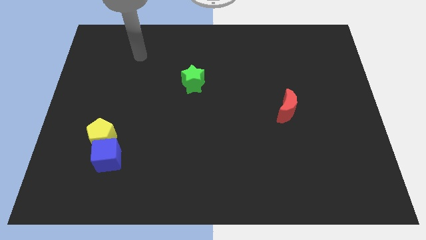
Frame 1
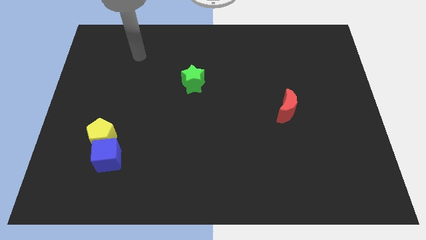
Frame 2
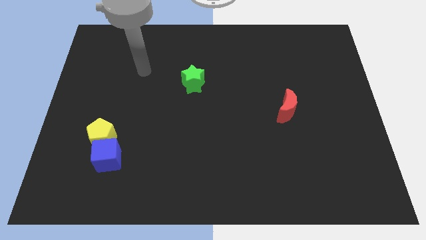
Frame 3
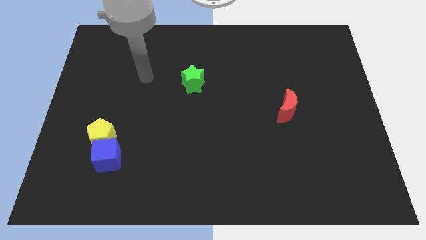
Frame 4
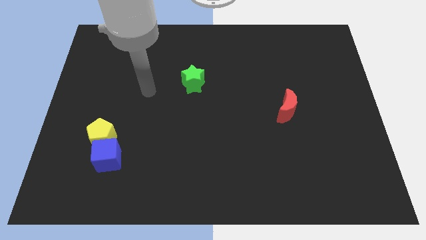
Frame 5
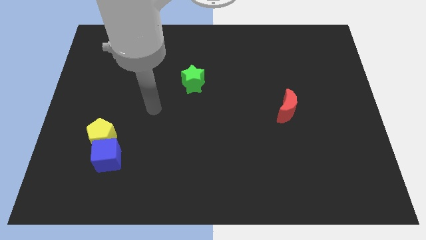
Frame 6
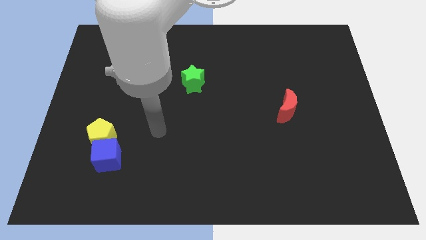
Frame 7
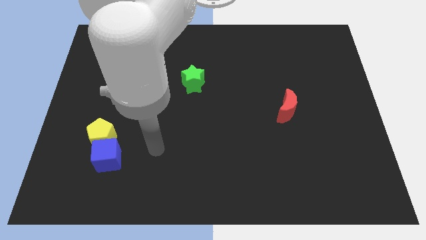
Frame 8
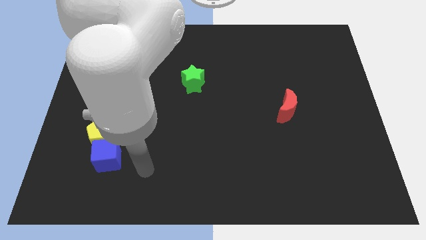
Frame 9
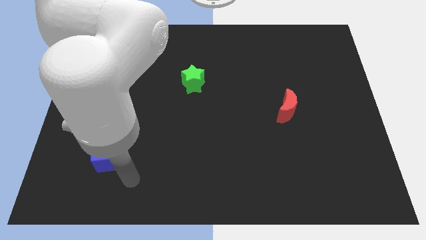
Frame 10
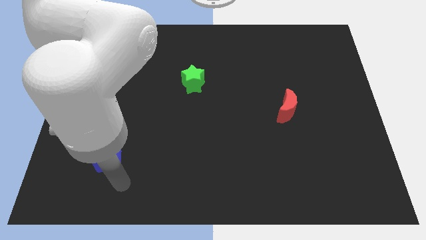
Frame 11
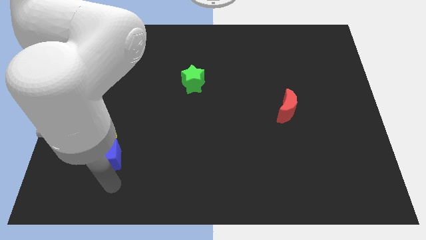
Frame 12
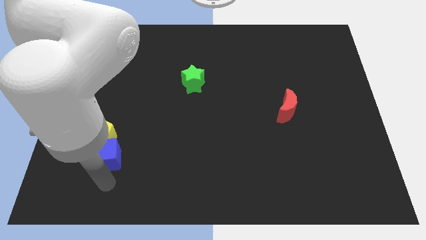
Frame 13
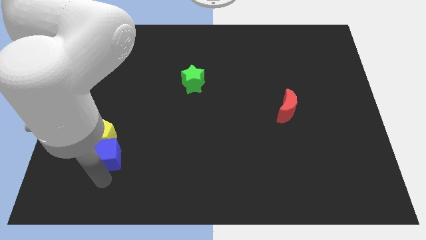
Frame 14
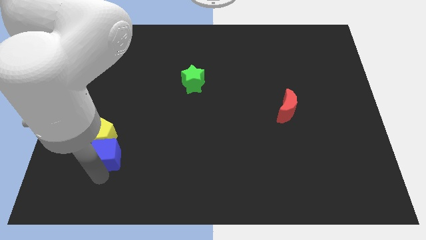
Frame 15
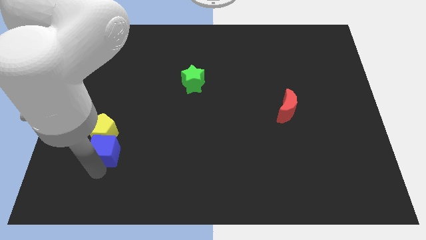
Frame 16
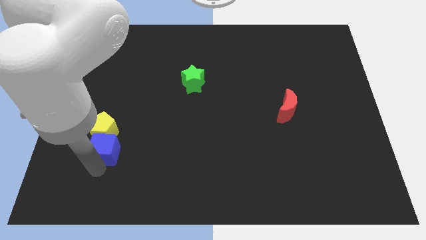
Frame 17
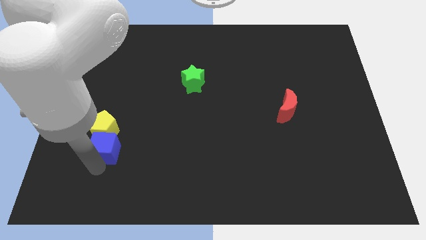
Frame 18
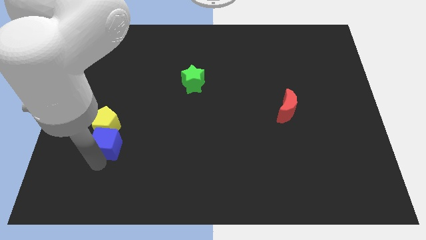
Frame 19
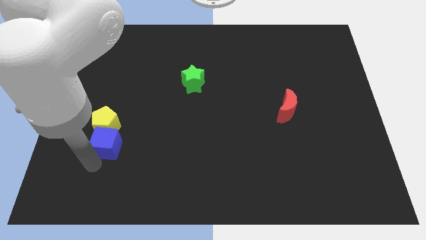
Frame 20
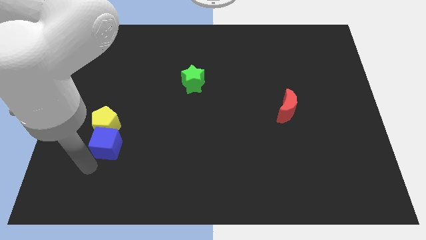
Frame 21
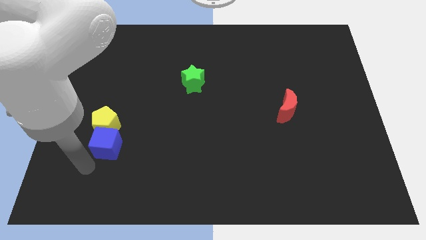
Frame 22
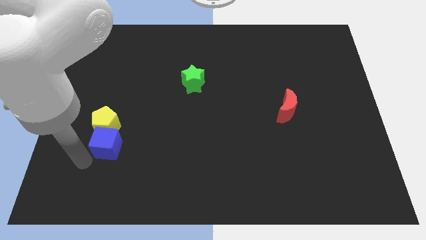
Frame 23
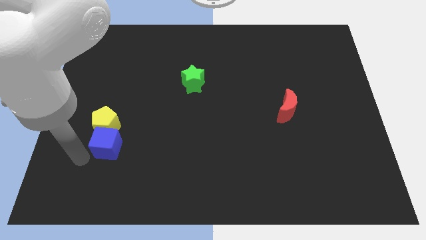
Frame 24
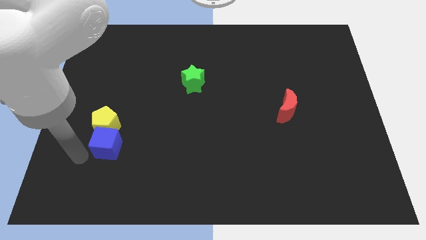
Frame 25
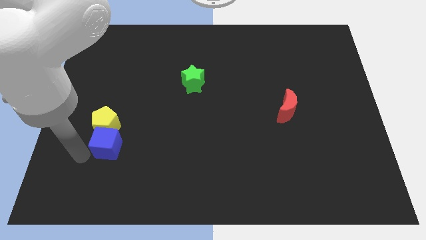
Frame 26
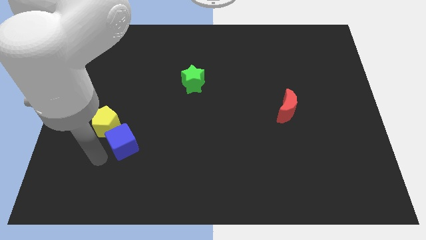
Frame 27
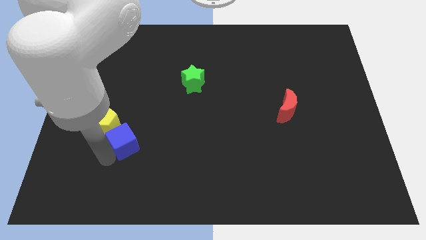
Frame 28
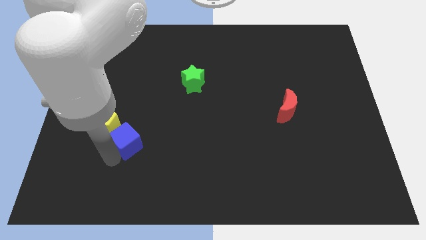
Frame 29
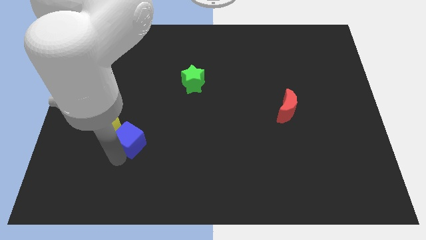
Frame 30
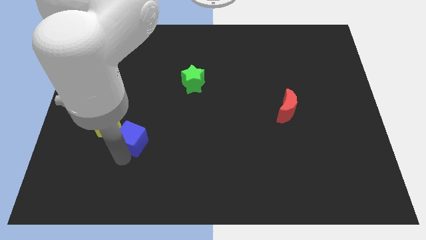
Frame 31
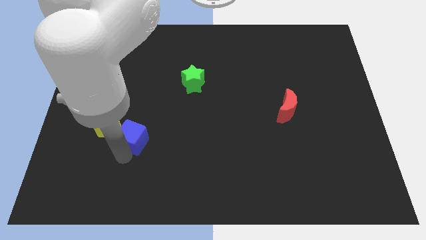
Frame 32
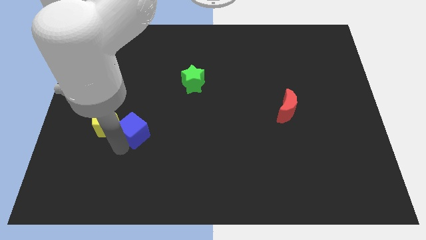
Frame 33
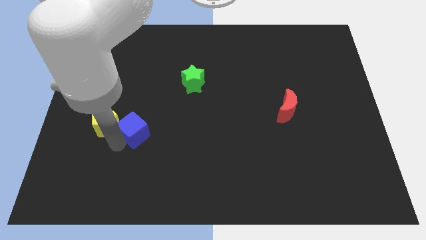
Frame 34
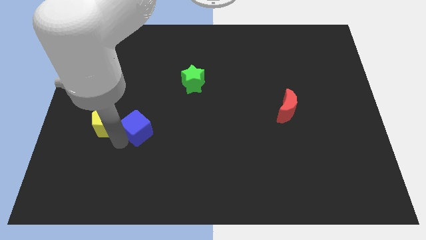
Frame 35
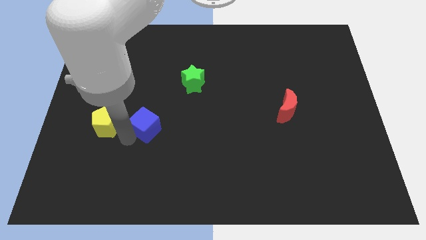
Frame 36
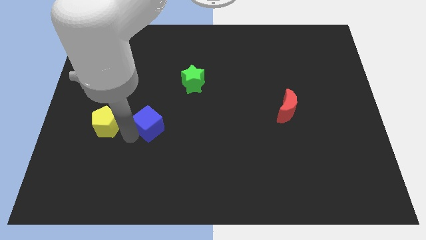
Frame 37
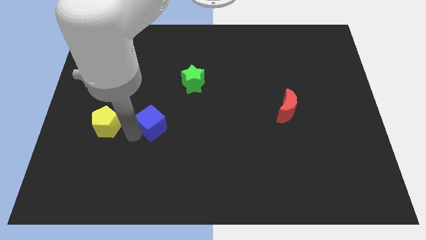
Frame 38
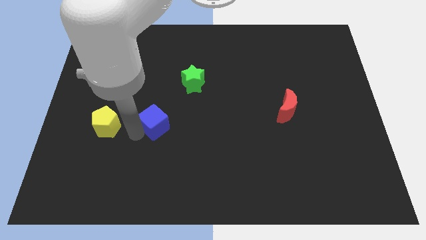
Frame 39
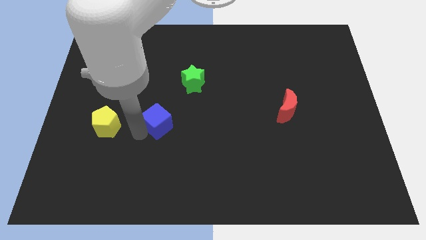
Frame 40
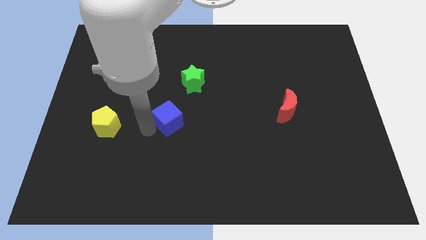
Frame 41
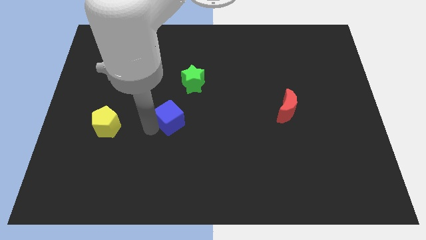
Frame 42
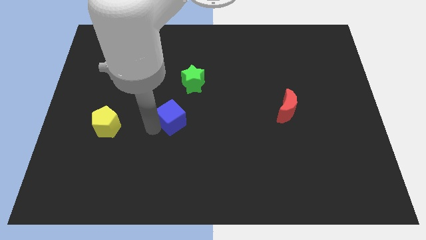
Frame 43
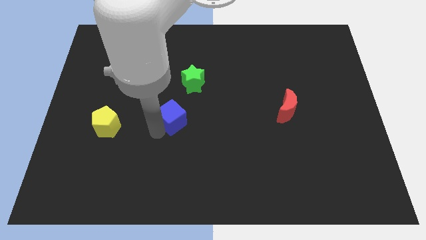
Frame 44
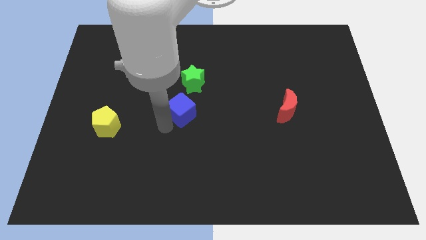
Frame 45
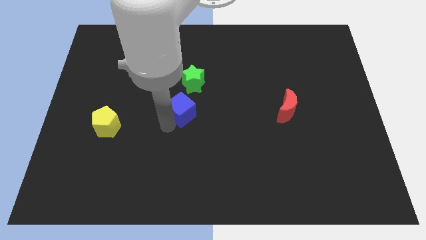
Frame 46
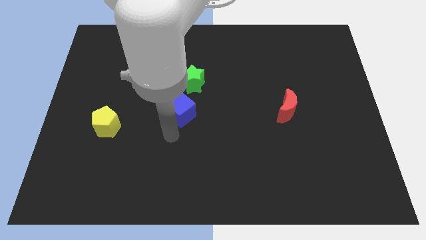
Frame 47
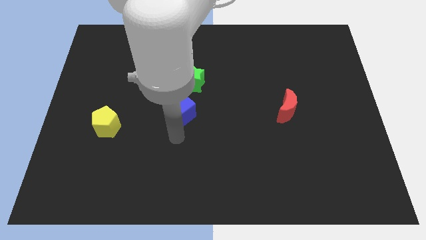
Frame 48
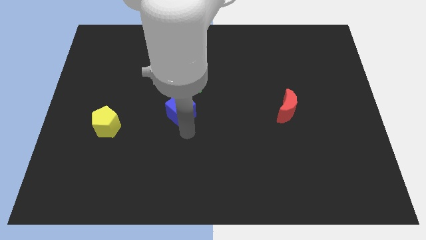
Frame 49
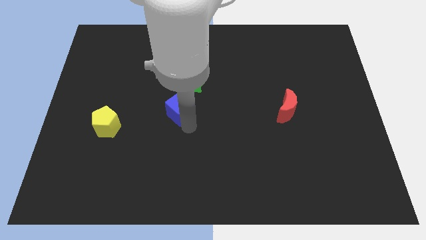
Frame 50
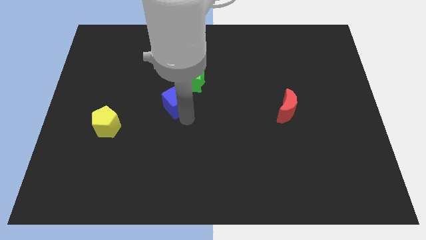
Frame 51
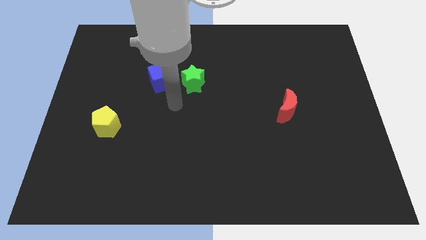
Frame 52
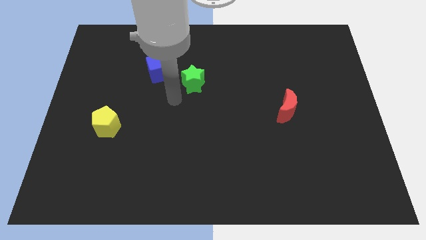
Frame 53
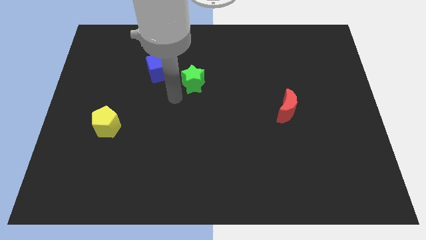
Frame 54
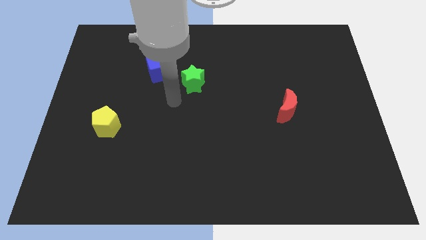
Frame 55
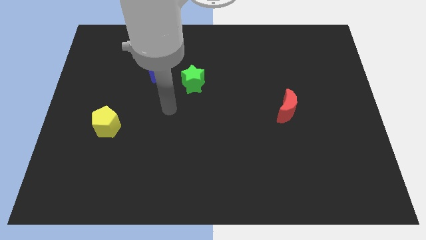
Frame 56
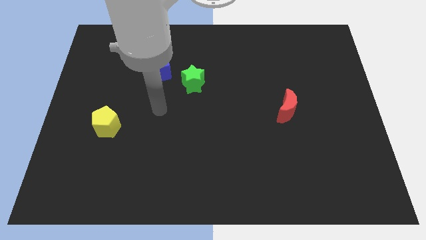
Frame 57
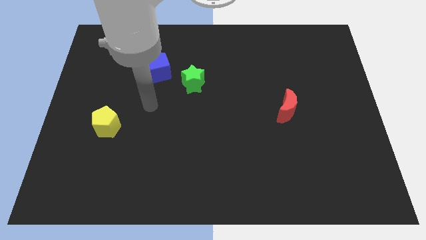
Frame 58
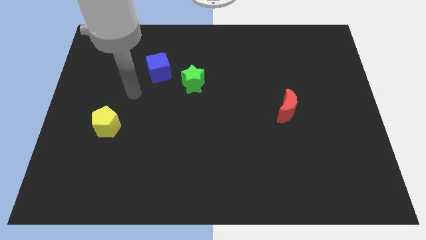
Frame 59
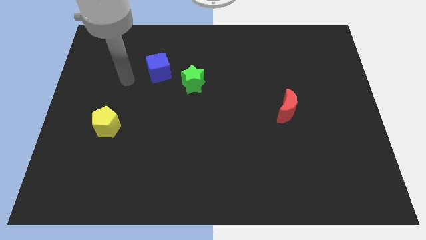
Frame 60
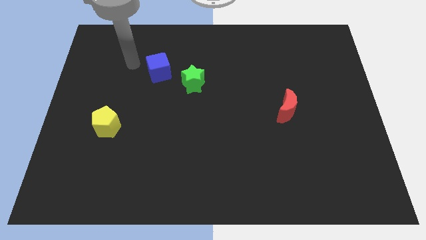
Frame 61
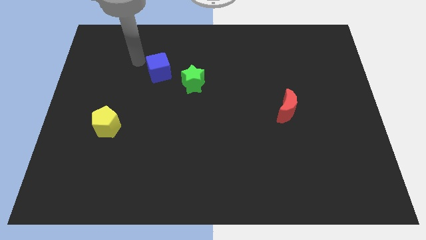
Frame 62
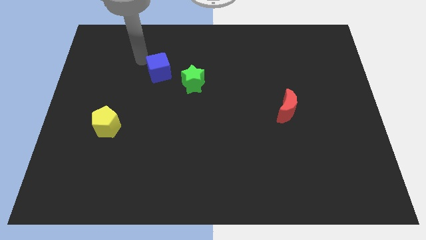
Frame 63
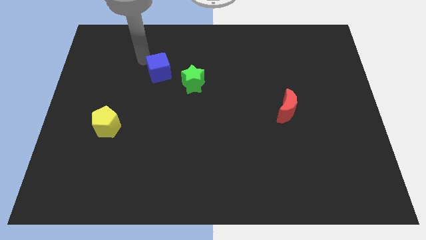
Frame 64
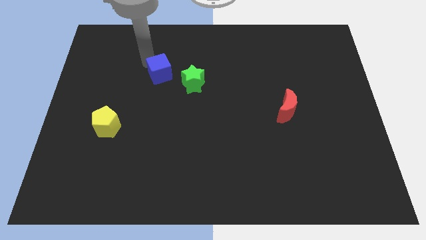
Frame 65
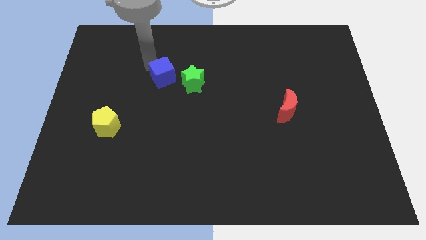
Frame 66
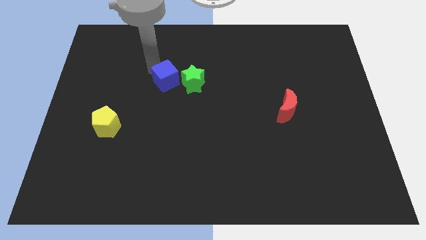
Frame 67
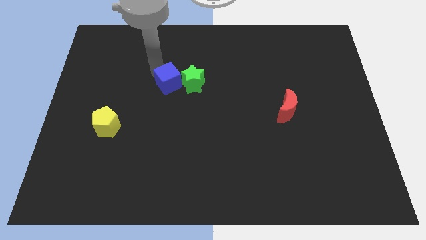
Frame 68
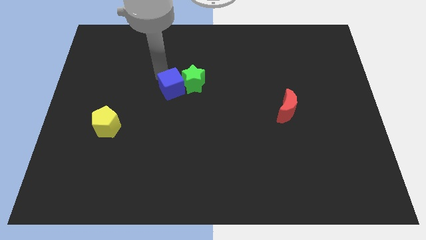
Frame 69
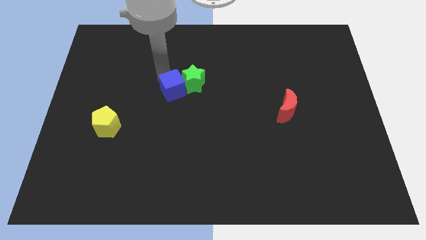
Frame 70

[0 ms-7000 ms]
put the blue block to the green star

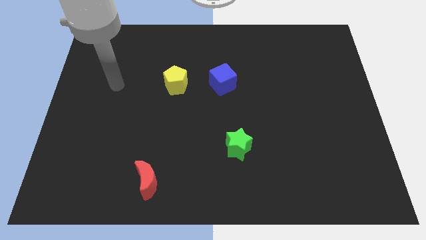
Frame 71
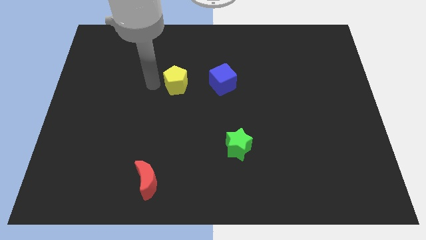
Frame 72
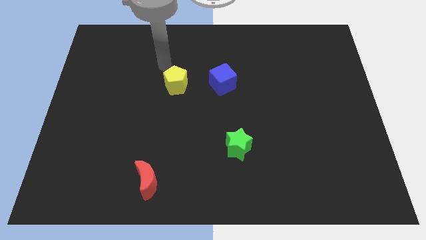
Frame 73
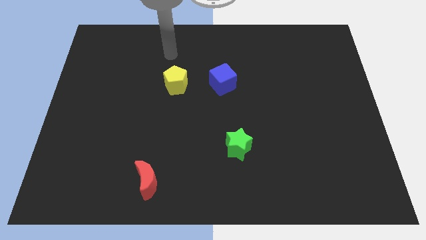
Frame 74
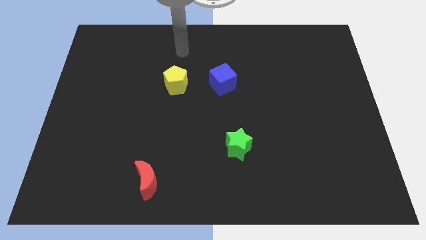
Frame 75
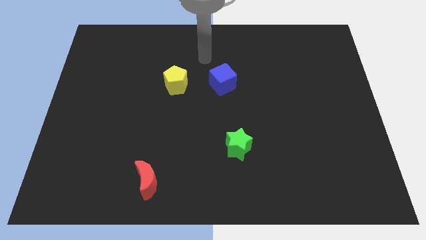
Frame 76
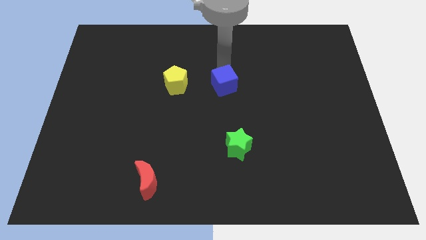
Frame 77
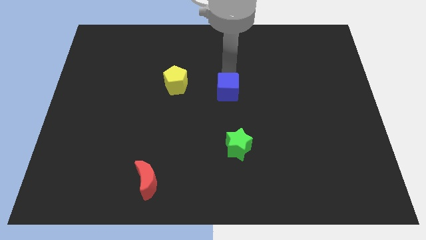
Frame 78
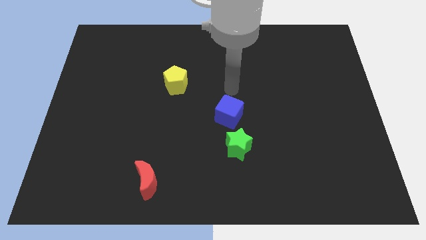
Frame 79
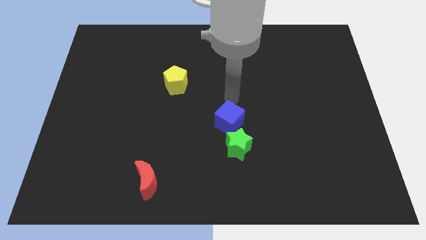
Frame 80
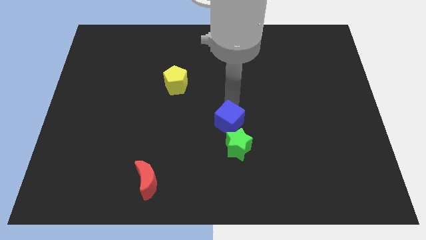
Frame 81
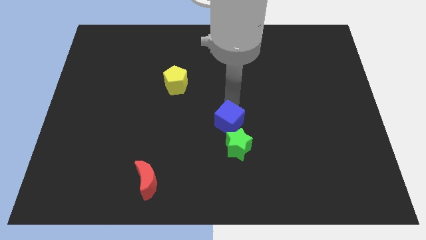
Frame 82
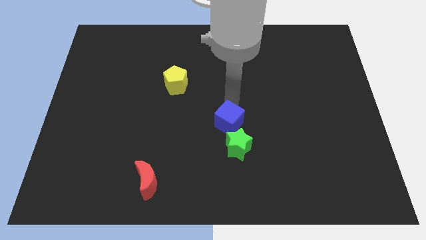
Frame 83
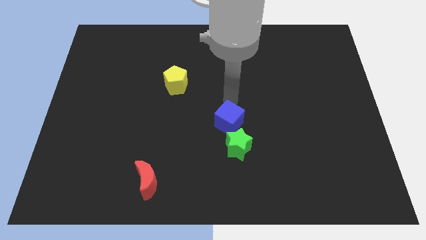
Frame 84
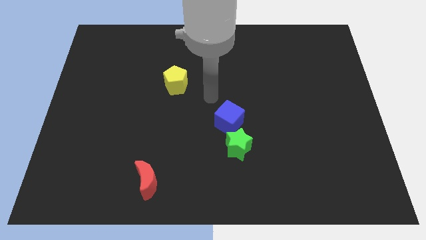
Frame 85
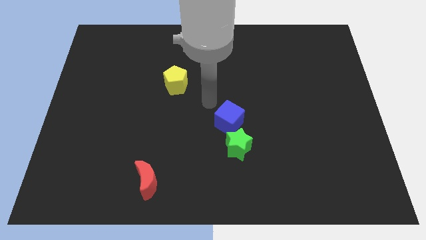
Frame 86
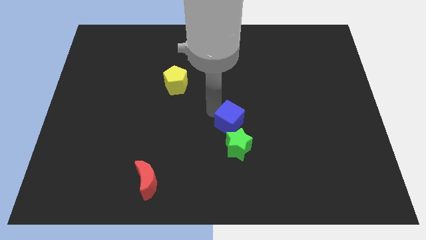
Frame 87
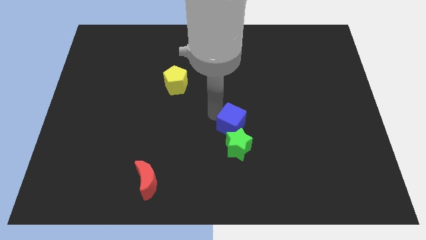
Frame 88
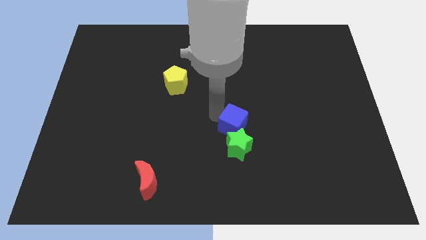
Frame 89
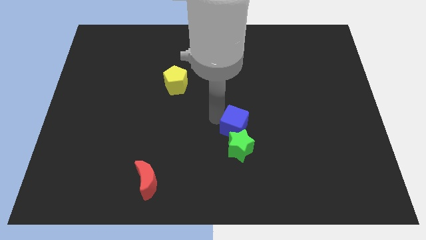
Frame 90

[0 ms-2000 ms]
move the cube close to the green star
